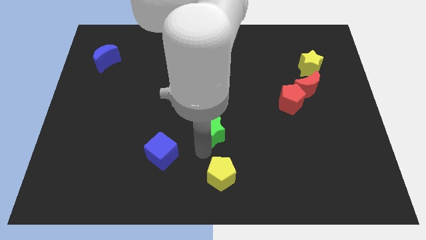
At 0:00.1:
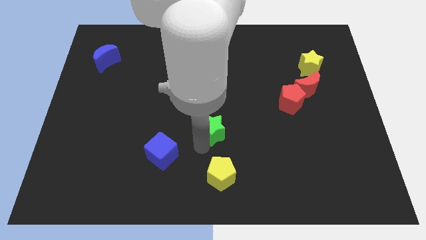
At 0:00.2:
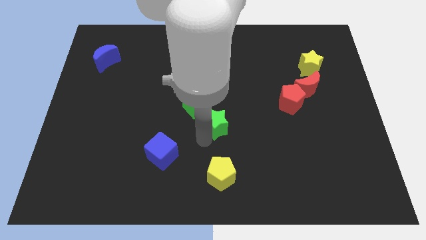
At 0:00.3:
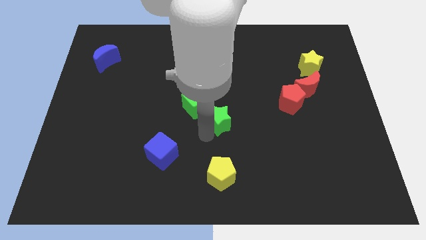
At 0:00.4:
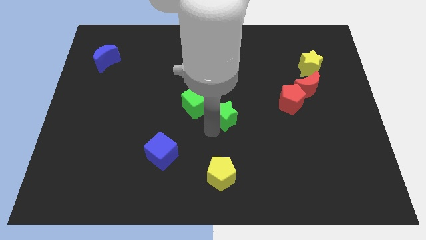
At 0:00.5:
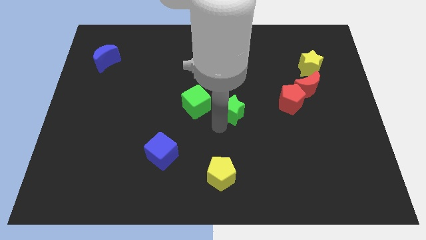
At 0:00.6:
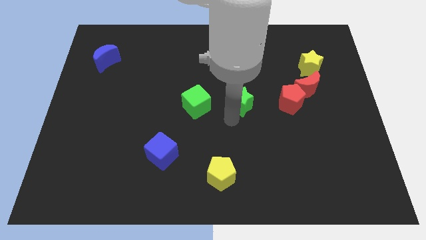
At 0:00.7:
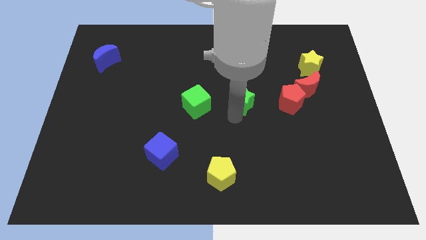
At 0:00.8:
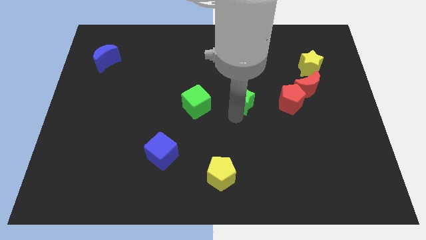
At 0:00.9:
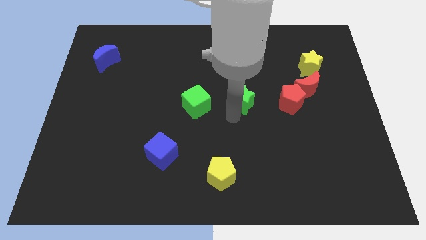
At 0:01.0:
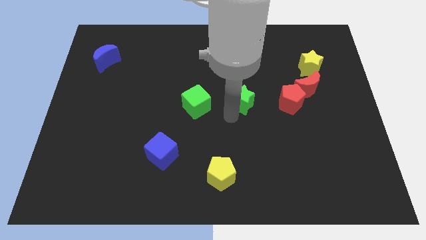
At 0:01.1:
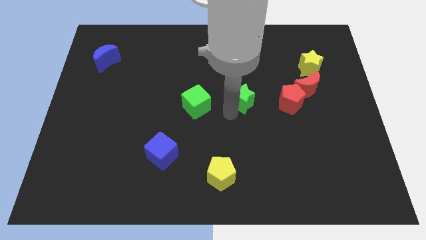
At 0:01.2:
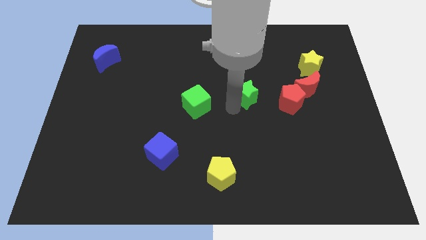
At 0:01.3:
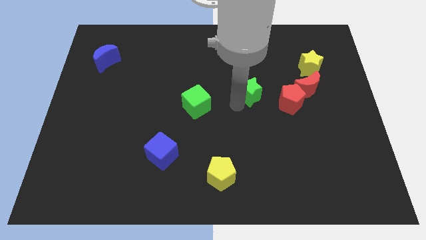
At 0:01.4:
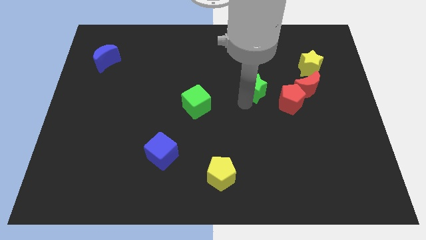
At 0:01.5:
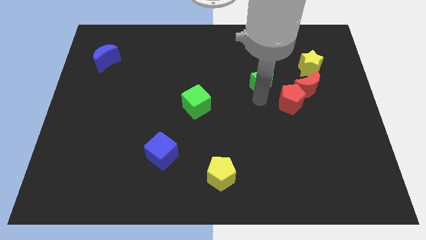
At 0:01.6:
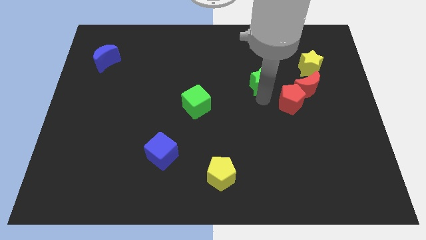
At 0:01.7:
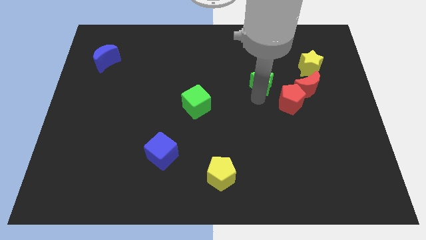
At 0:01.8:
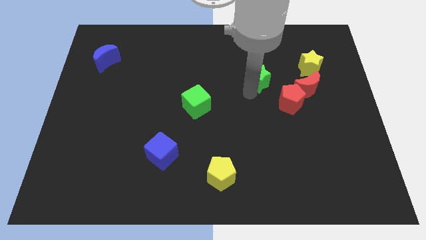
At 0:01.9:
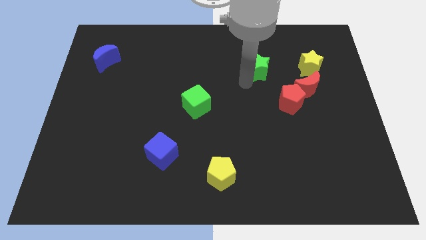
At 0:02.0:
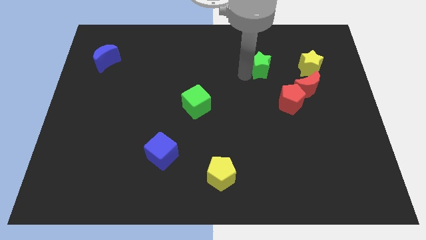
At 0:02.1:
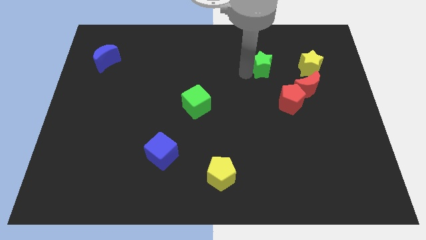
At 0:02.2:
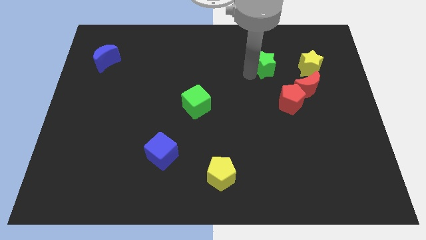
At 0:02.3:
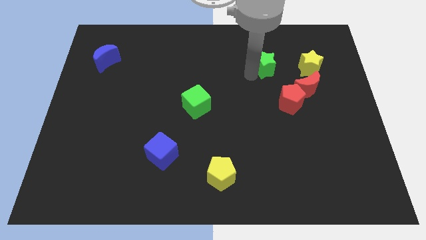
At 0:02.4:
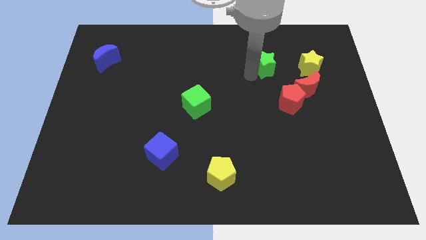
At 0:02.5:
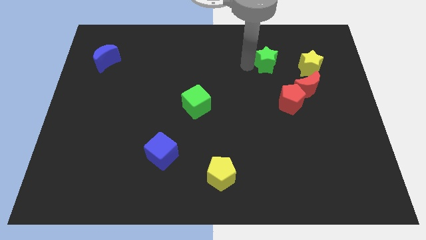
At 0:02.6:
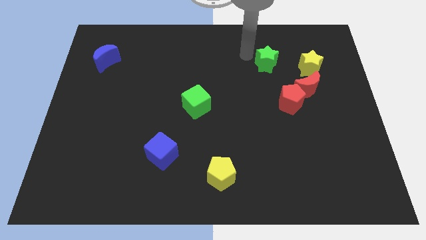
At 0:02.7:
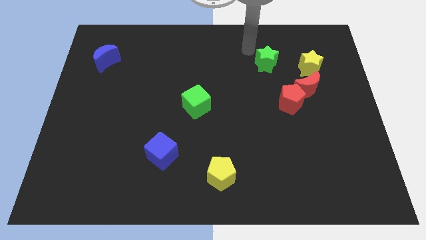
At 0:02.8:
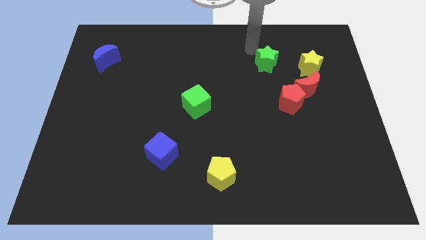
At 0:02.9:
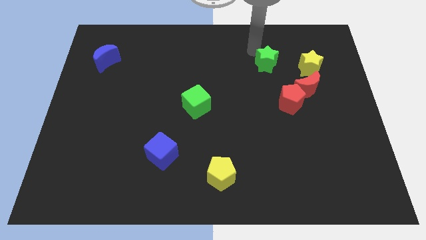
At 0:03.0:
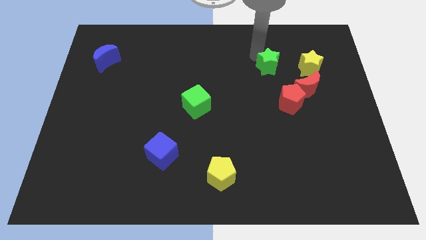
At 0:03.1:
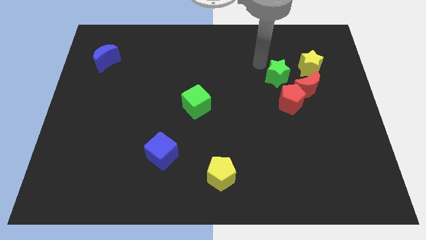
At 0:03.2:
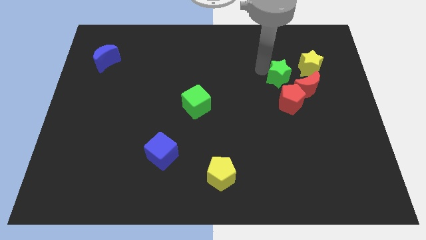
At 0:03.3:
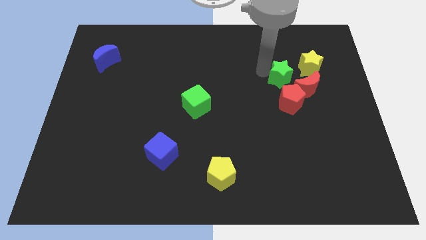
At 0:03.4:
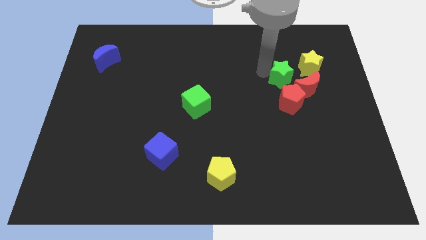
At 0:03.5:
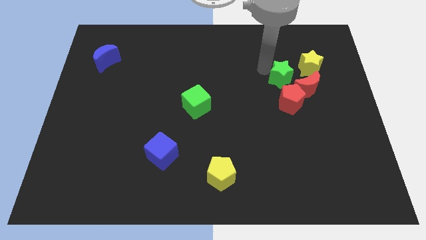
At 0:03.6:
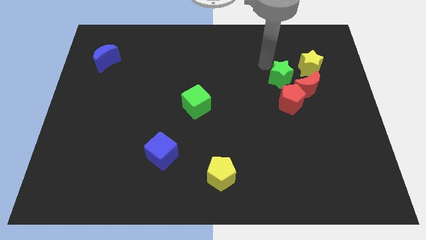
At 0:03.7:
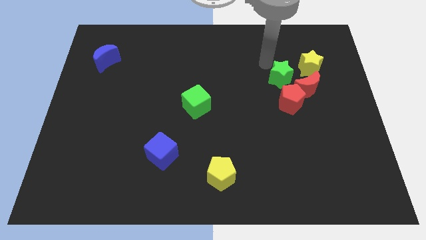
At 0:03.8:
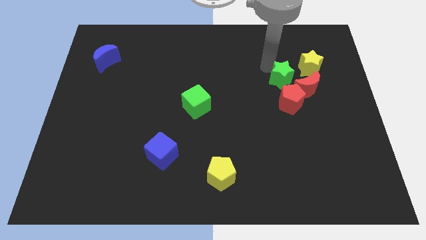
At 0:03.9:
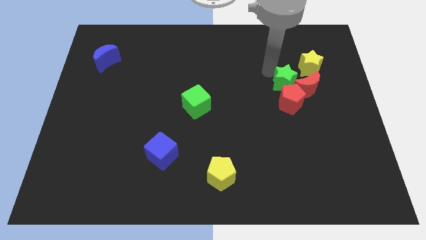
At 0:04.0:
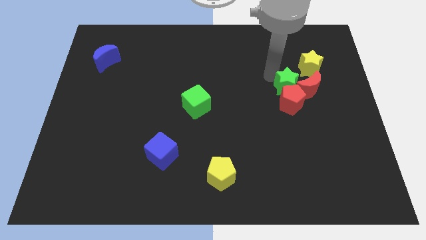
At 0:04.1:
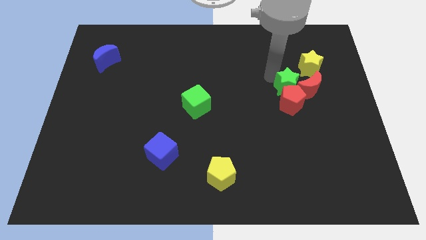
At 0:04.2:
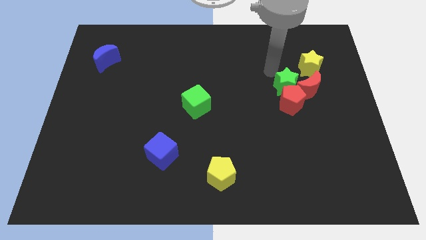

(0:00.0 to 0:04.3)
place the green star left to red crescent

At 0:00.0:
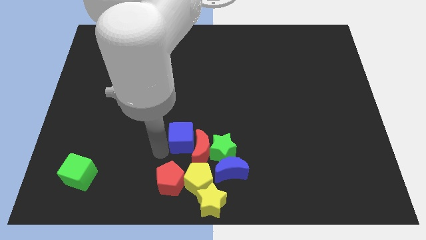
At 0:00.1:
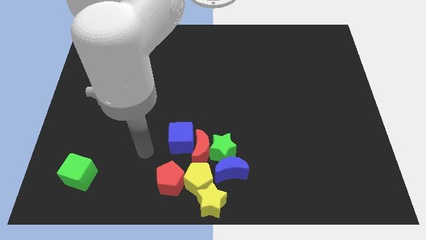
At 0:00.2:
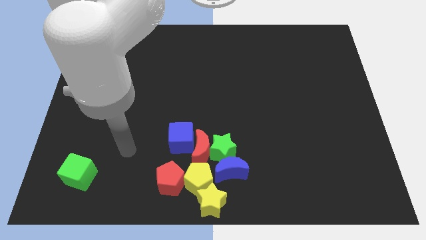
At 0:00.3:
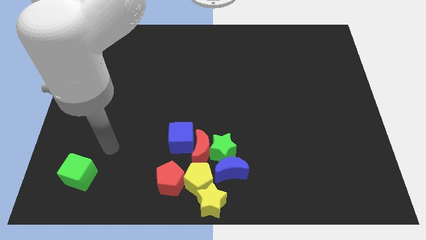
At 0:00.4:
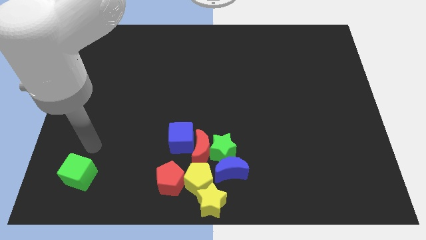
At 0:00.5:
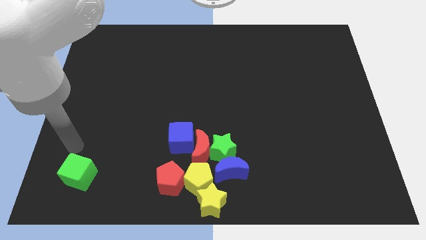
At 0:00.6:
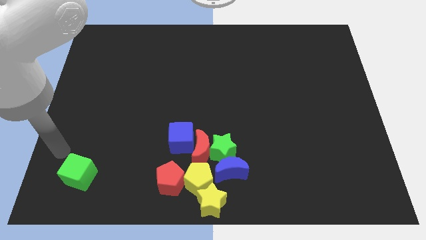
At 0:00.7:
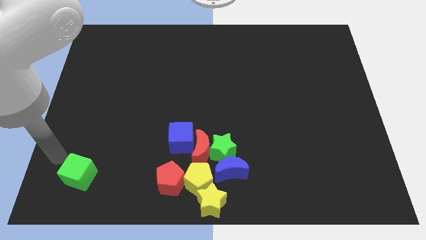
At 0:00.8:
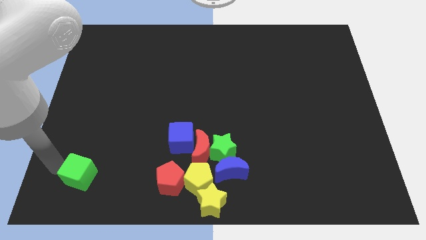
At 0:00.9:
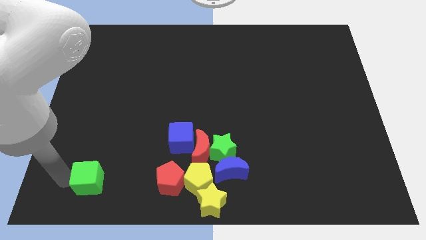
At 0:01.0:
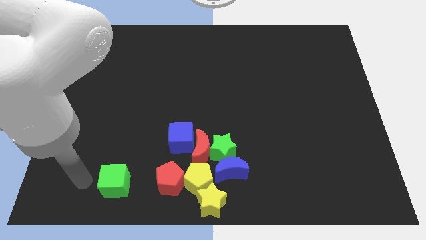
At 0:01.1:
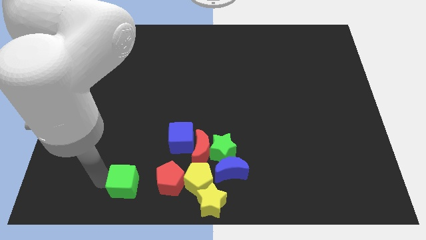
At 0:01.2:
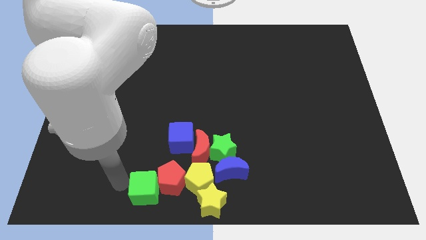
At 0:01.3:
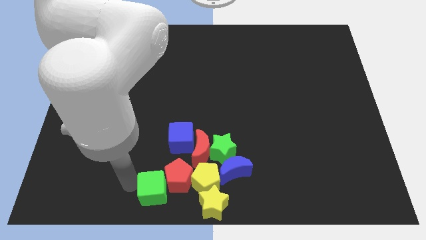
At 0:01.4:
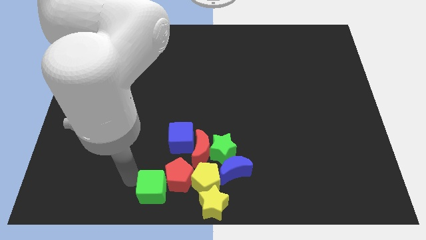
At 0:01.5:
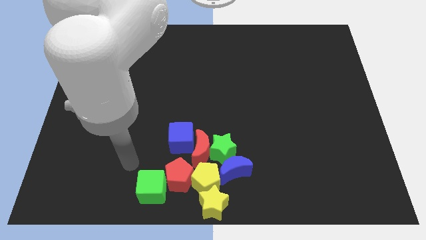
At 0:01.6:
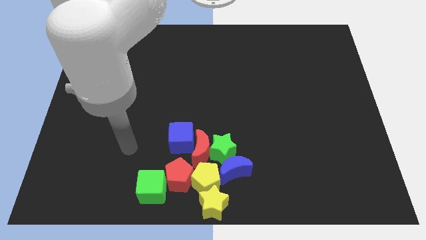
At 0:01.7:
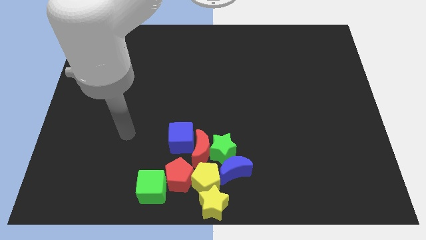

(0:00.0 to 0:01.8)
touch red pentagon with green cube

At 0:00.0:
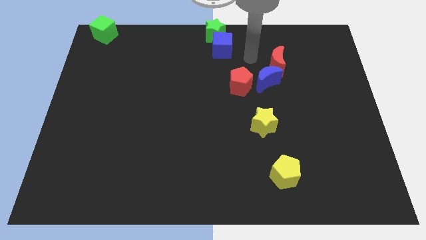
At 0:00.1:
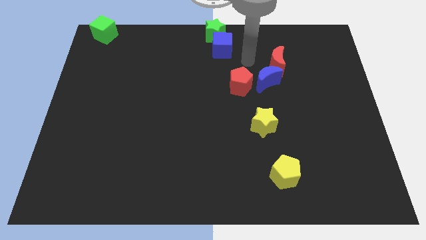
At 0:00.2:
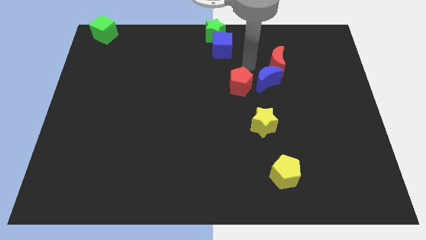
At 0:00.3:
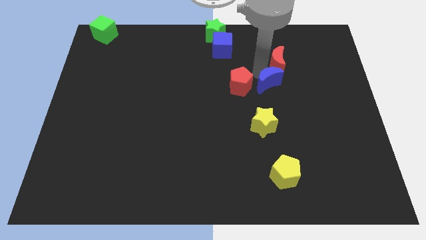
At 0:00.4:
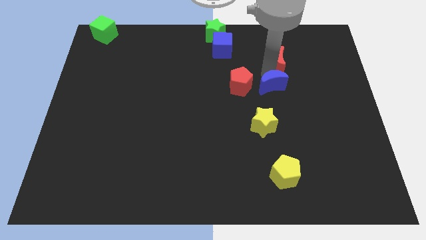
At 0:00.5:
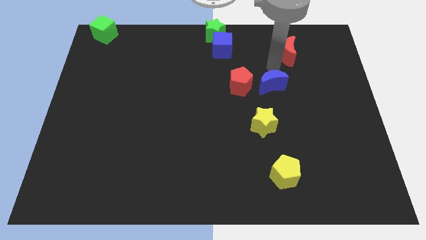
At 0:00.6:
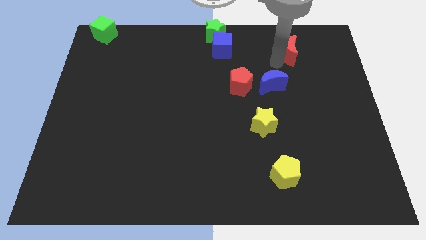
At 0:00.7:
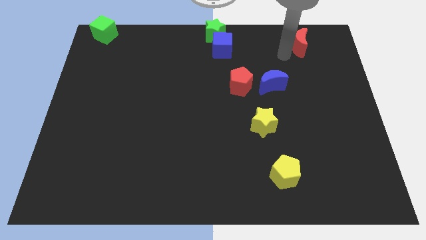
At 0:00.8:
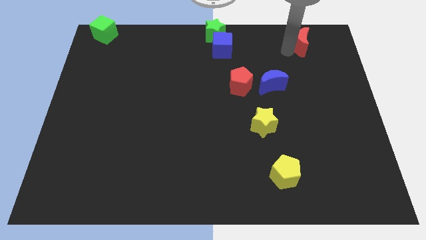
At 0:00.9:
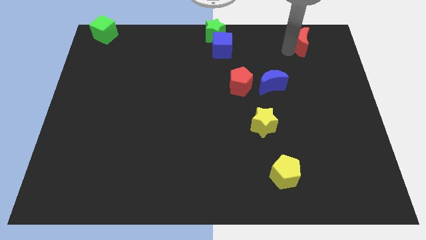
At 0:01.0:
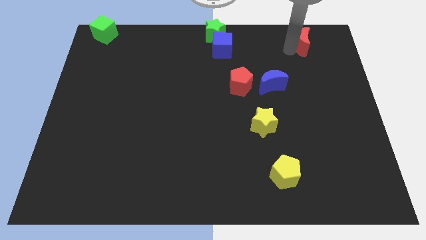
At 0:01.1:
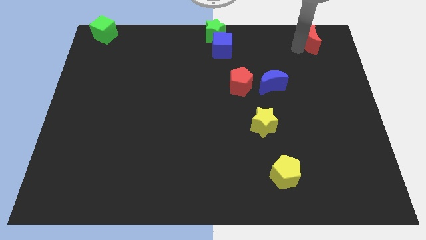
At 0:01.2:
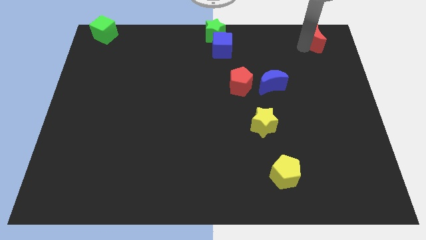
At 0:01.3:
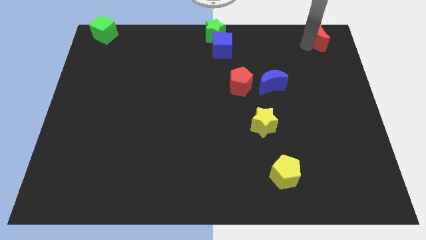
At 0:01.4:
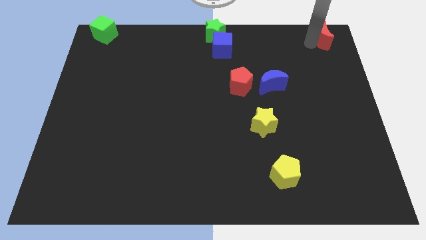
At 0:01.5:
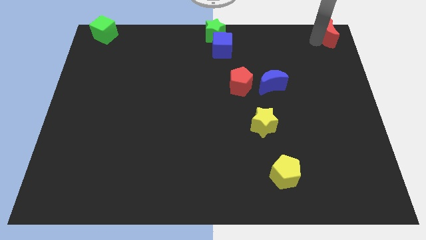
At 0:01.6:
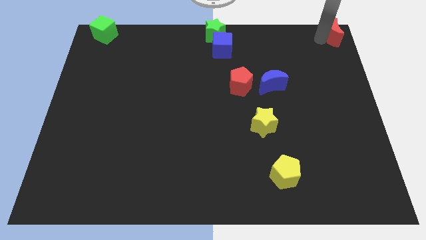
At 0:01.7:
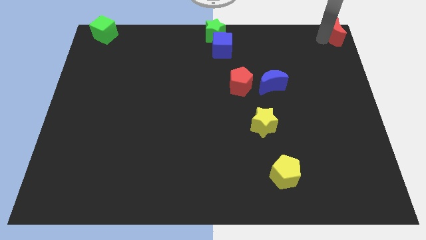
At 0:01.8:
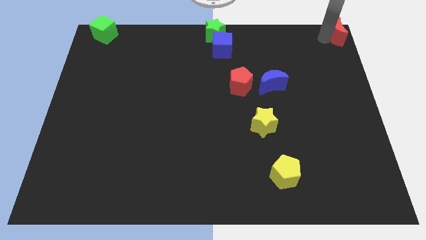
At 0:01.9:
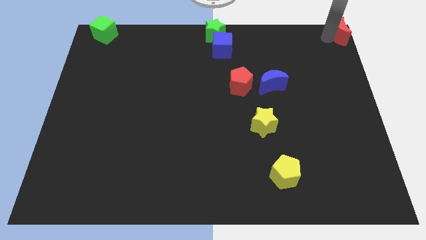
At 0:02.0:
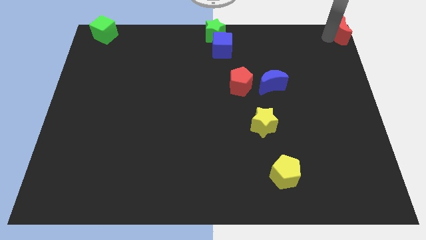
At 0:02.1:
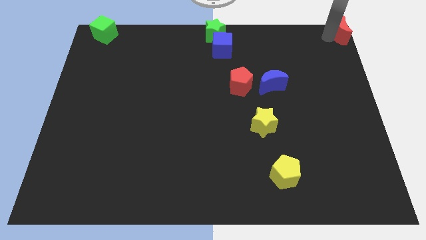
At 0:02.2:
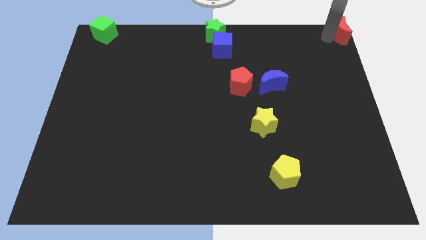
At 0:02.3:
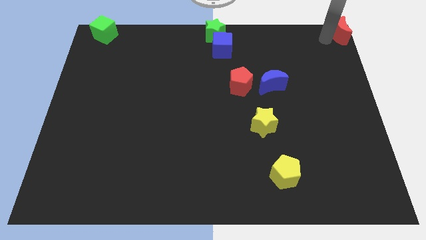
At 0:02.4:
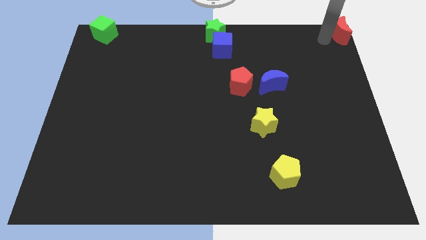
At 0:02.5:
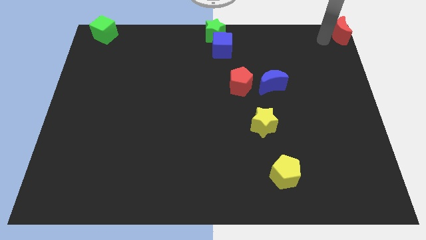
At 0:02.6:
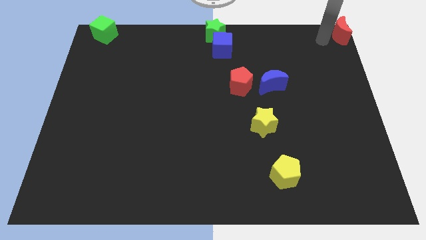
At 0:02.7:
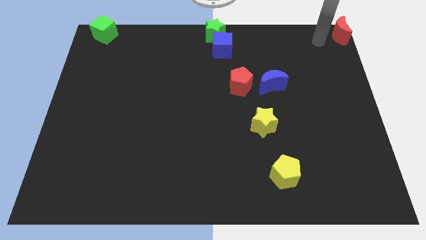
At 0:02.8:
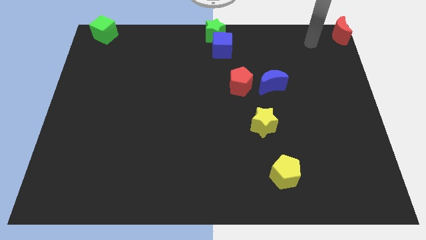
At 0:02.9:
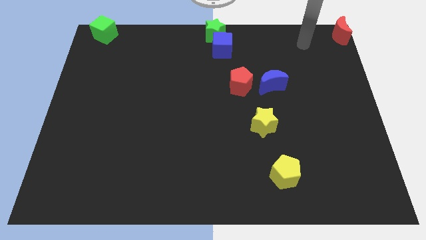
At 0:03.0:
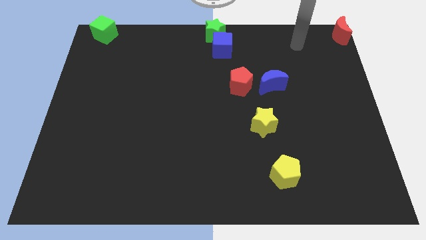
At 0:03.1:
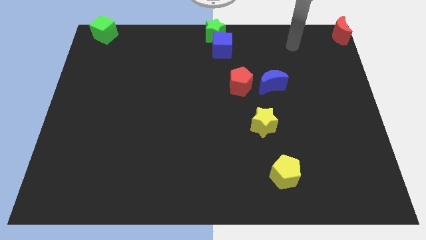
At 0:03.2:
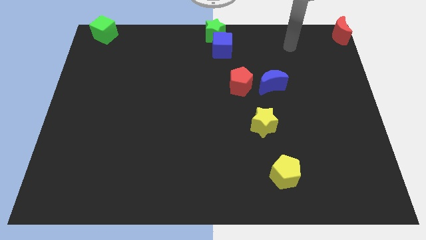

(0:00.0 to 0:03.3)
move the red crescent to the top right corner
